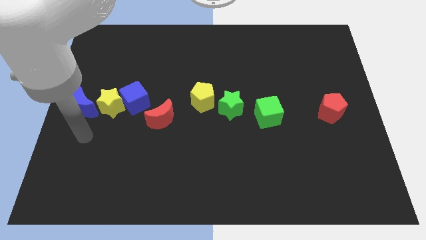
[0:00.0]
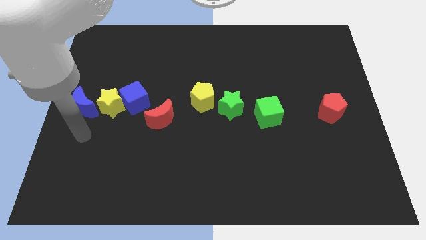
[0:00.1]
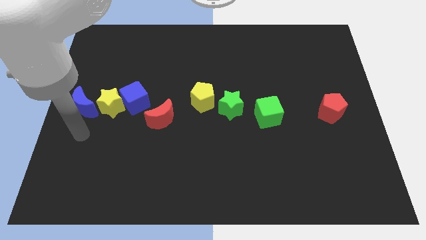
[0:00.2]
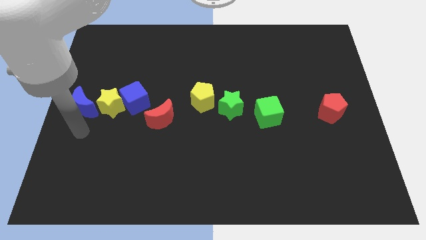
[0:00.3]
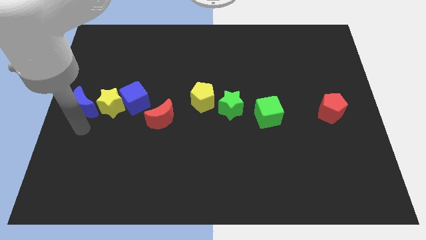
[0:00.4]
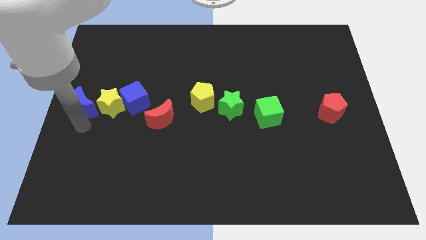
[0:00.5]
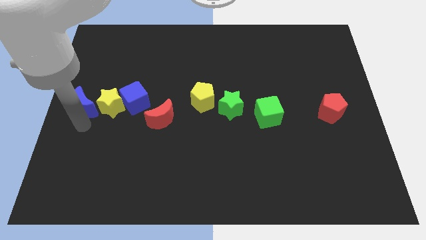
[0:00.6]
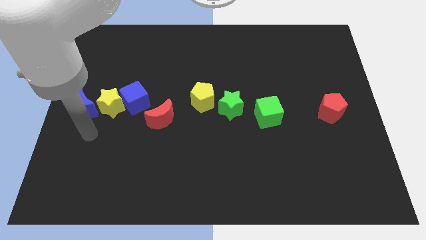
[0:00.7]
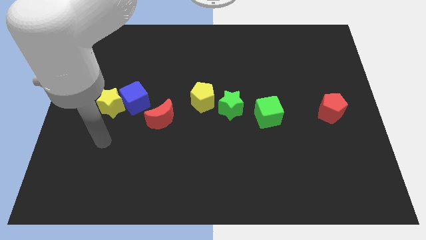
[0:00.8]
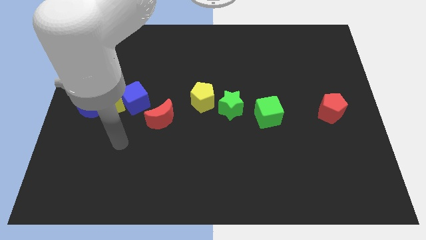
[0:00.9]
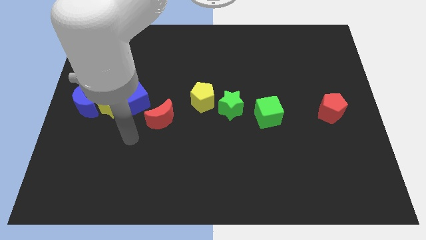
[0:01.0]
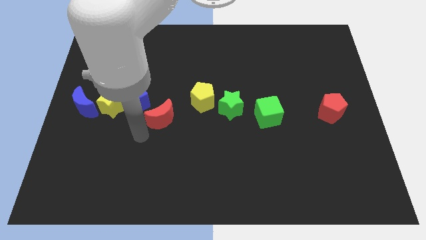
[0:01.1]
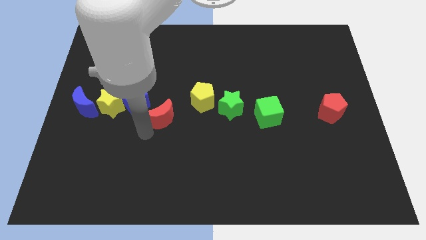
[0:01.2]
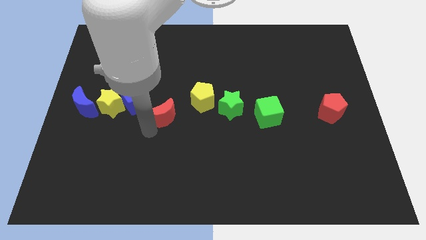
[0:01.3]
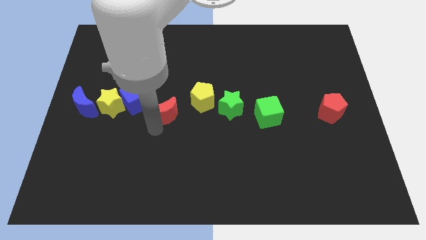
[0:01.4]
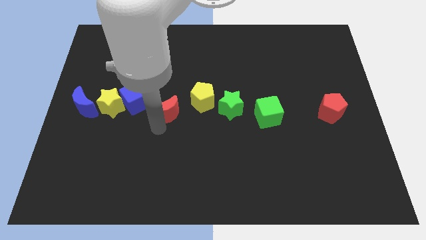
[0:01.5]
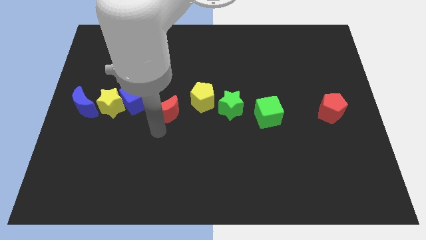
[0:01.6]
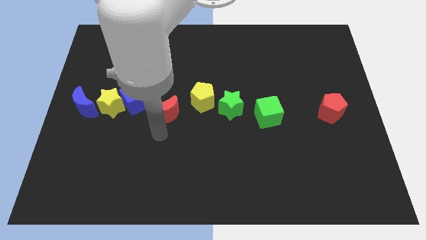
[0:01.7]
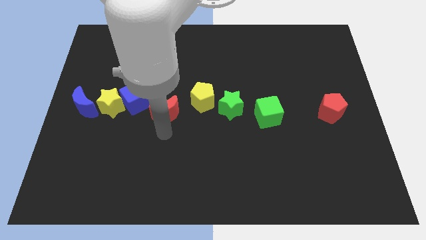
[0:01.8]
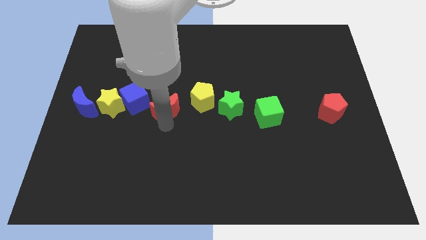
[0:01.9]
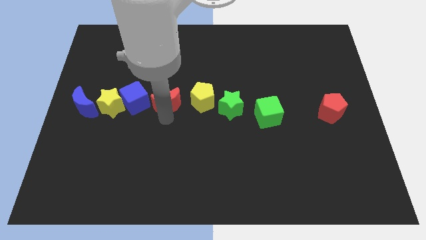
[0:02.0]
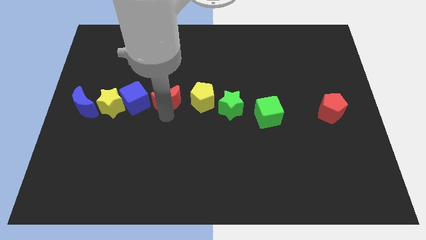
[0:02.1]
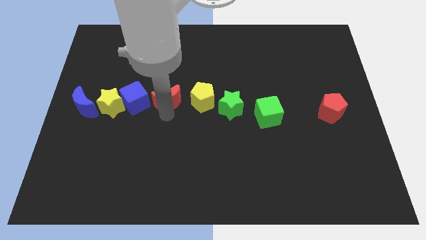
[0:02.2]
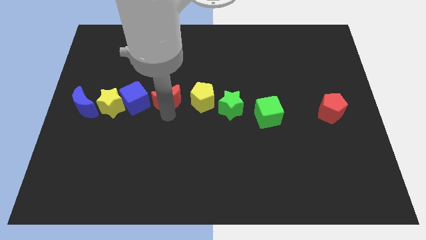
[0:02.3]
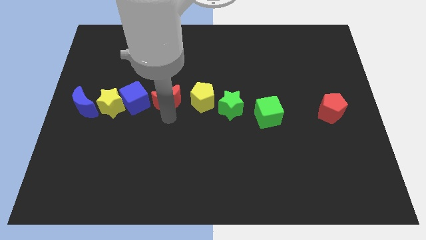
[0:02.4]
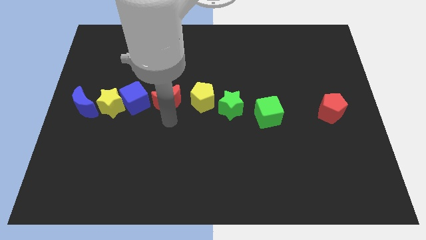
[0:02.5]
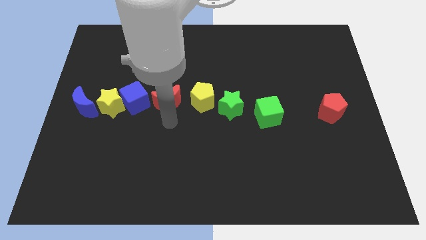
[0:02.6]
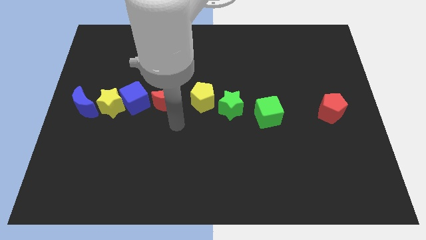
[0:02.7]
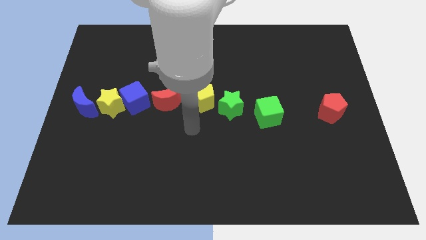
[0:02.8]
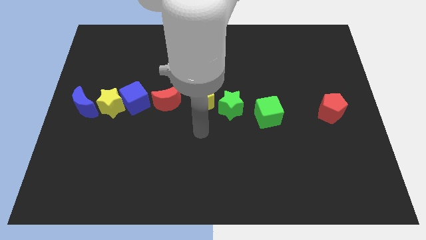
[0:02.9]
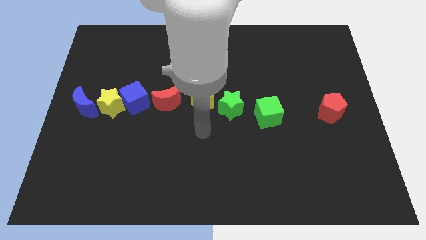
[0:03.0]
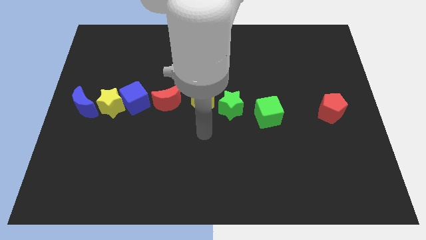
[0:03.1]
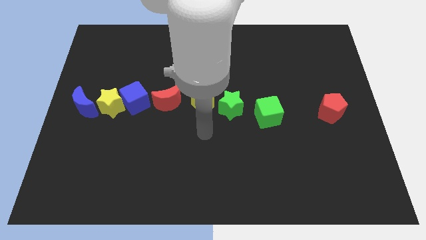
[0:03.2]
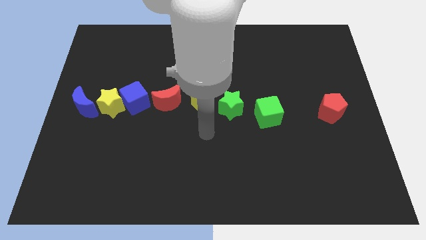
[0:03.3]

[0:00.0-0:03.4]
place the red moon in between the blue cube and the yellow pentagon

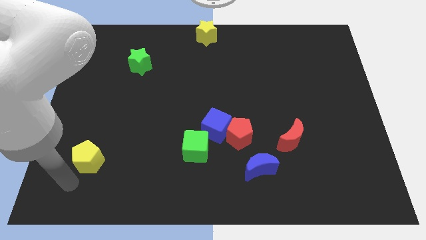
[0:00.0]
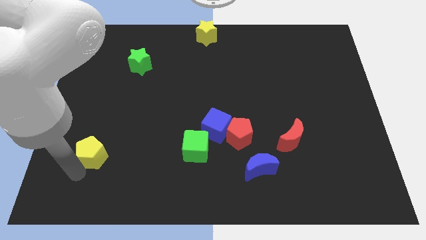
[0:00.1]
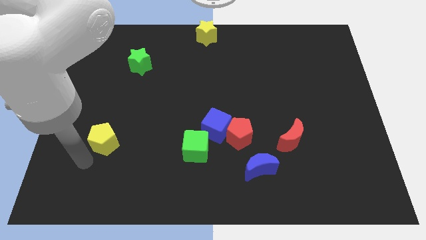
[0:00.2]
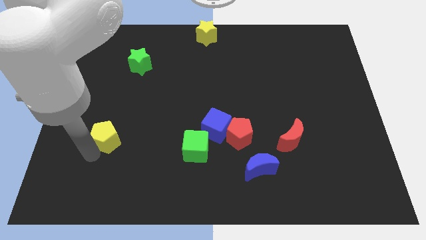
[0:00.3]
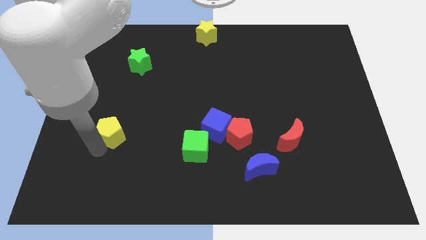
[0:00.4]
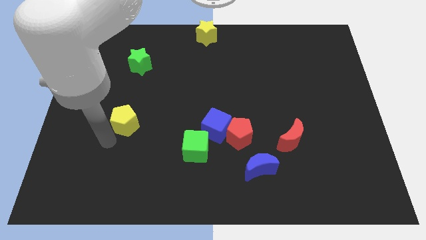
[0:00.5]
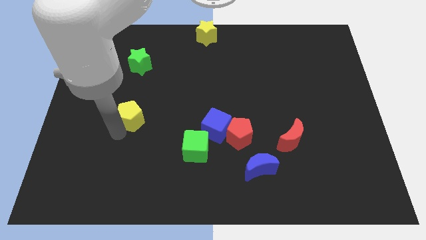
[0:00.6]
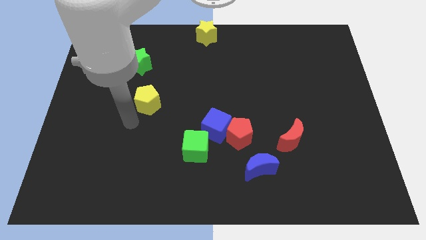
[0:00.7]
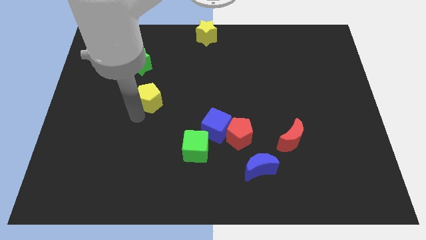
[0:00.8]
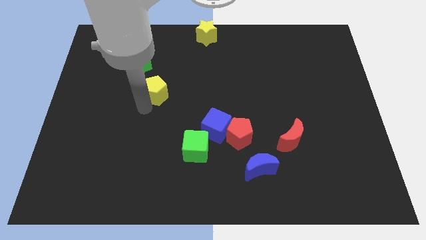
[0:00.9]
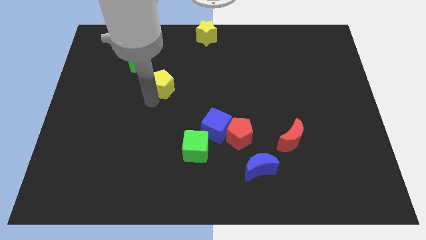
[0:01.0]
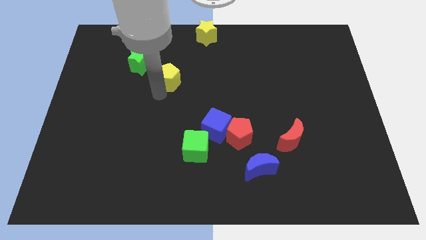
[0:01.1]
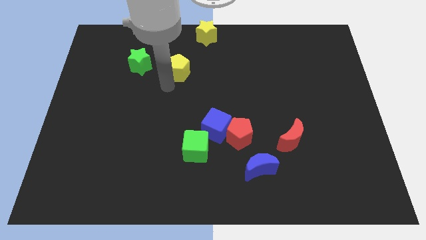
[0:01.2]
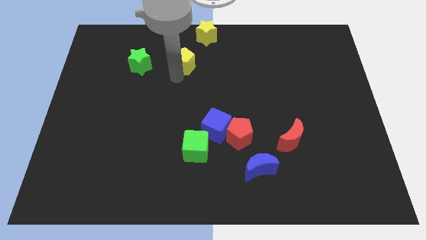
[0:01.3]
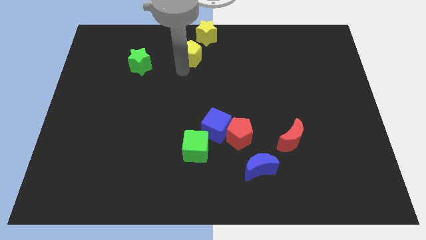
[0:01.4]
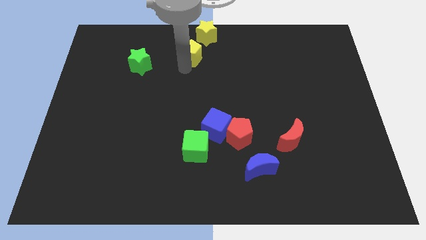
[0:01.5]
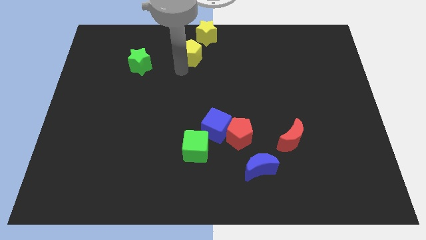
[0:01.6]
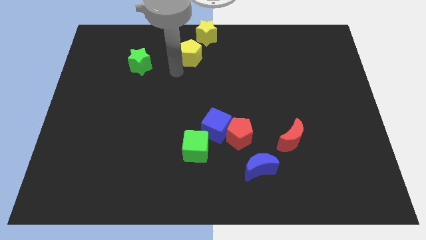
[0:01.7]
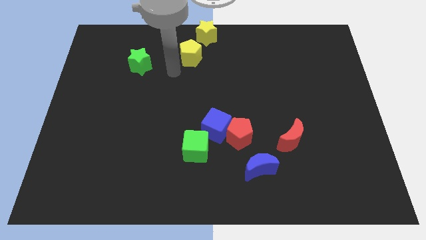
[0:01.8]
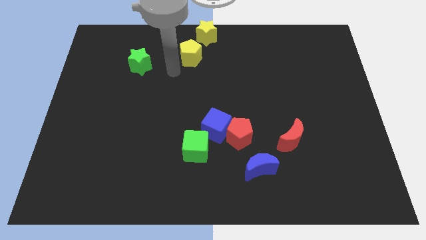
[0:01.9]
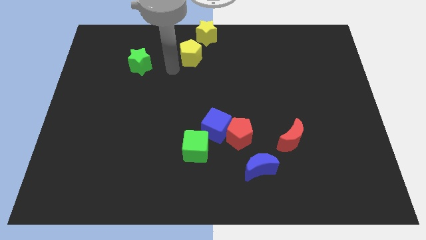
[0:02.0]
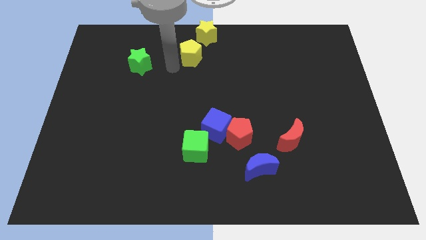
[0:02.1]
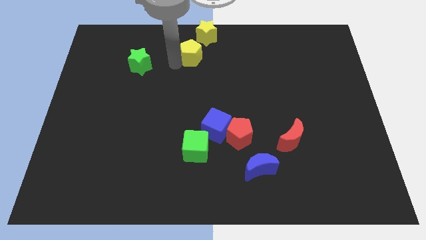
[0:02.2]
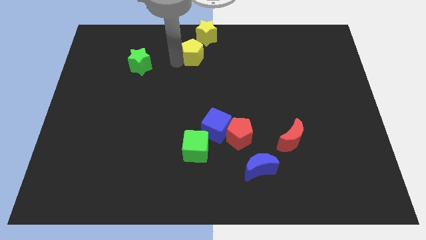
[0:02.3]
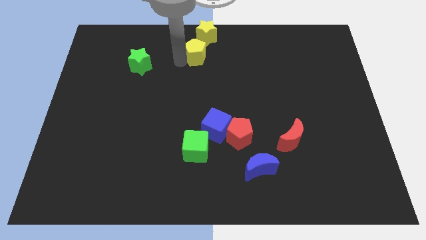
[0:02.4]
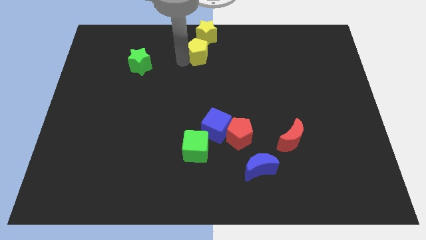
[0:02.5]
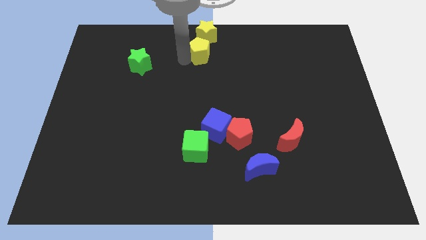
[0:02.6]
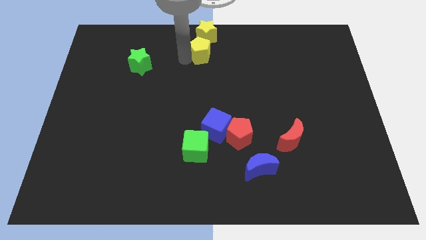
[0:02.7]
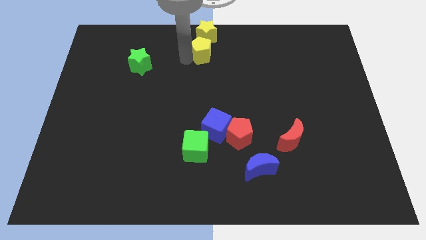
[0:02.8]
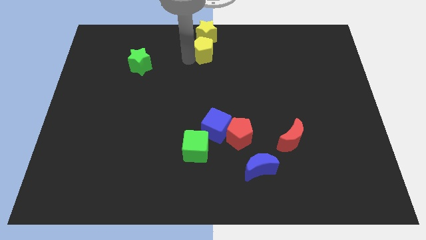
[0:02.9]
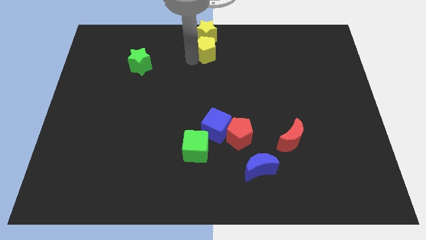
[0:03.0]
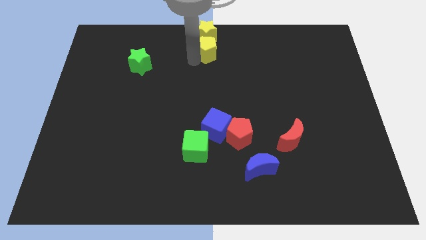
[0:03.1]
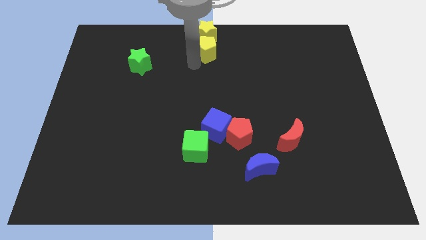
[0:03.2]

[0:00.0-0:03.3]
push the yellow pentagon to the bottom of yellow star

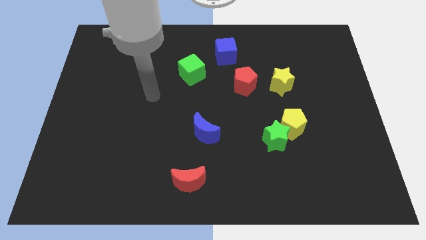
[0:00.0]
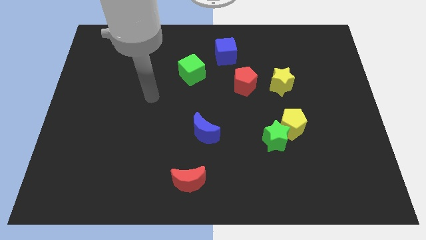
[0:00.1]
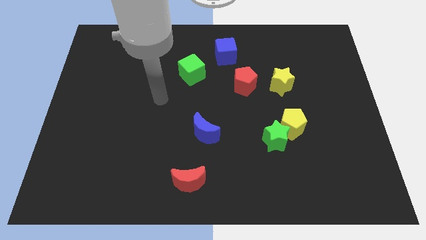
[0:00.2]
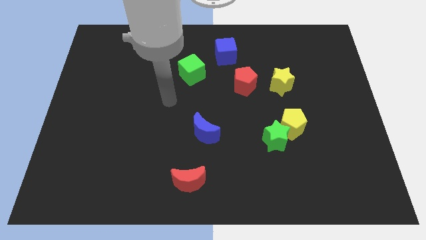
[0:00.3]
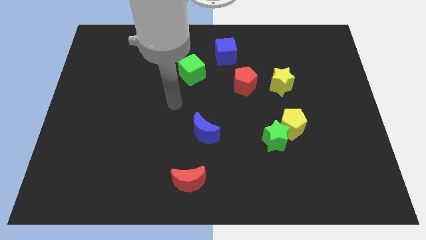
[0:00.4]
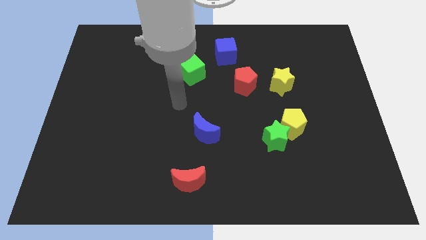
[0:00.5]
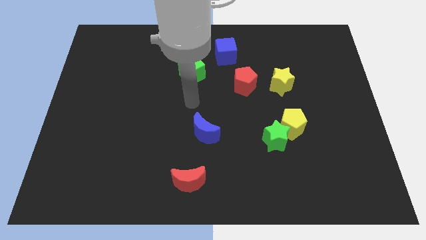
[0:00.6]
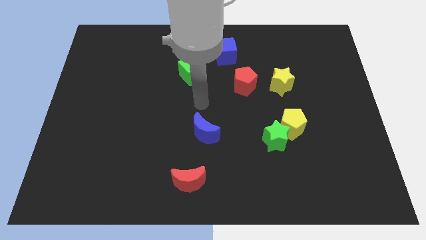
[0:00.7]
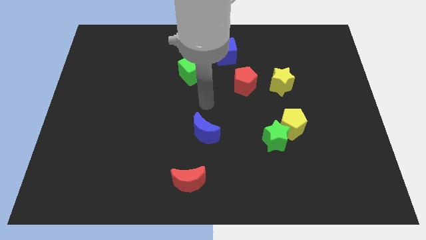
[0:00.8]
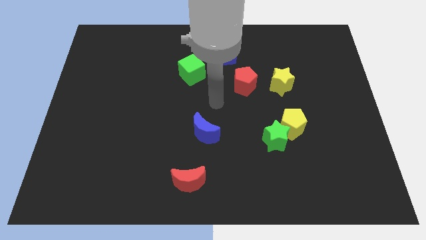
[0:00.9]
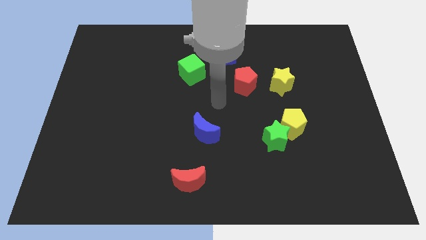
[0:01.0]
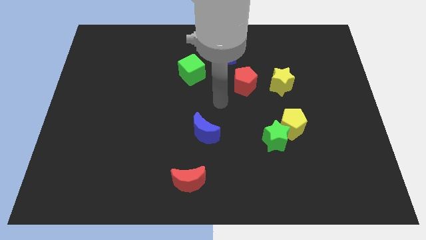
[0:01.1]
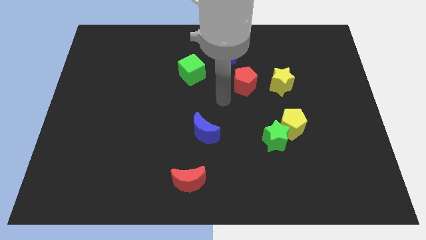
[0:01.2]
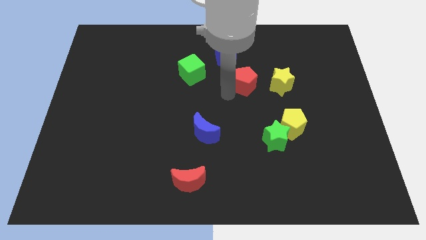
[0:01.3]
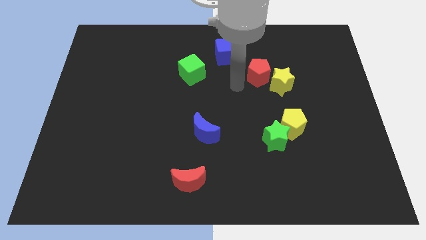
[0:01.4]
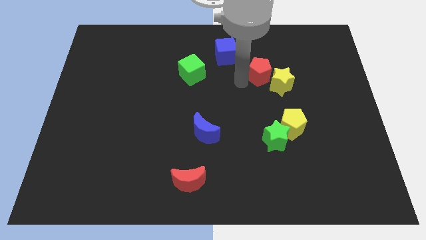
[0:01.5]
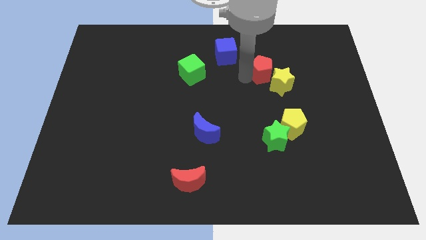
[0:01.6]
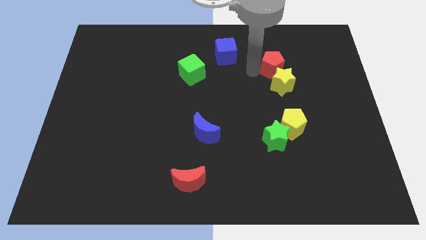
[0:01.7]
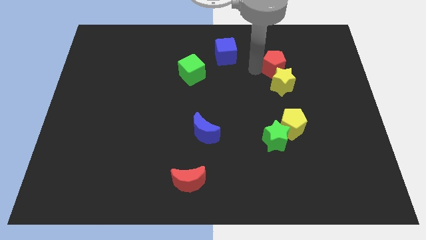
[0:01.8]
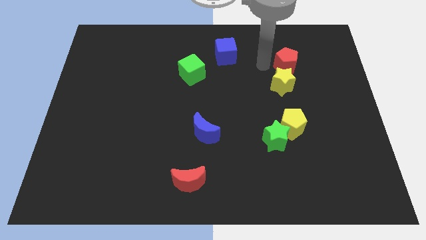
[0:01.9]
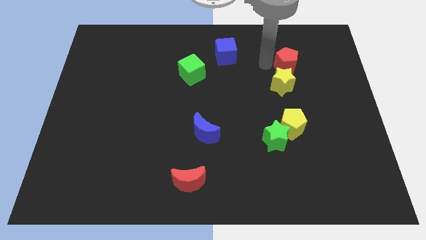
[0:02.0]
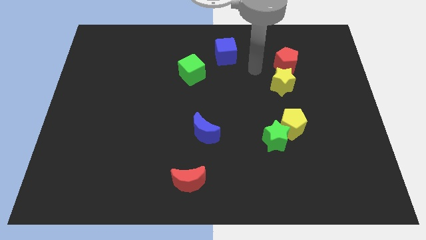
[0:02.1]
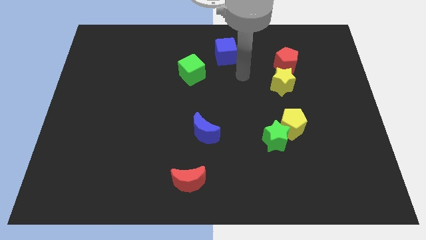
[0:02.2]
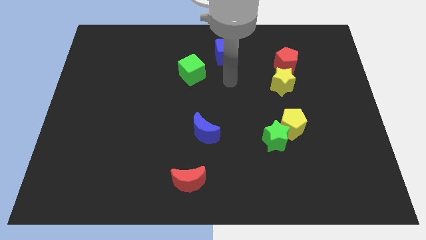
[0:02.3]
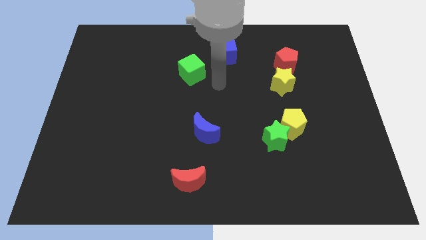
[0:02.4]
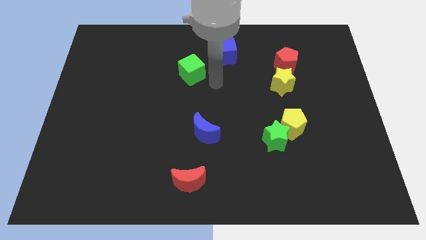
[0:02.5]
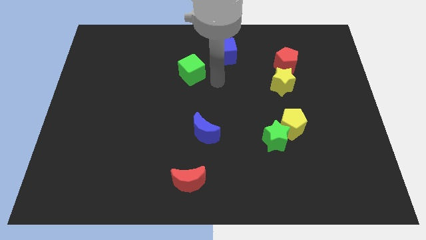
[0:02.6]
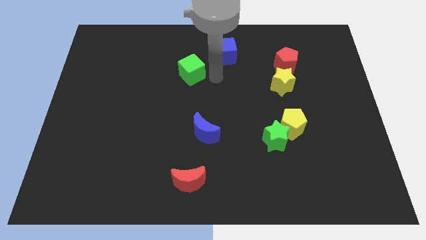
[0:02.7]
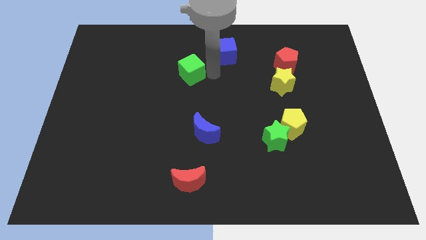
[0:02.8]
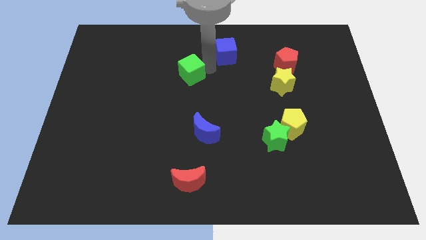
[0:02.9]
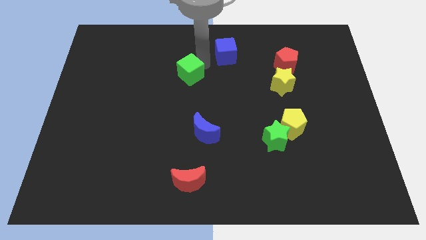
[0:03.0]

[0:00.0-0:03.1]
put the red pentagon at the top of the yellow star
